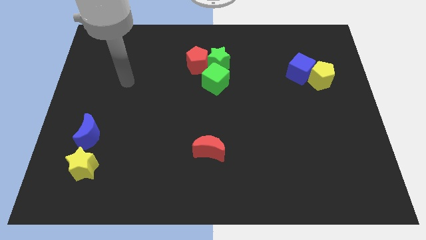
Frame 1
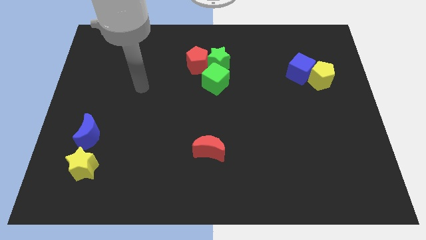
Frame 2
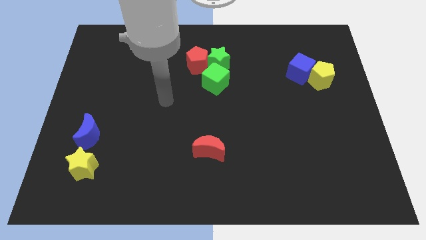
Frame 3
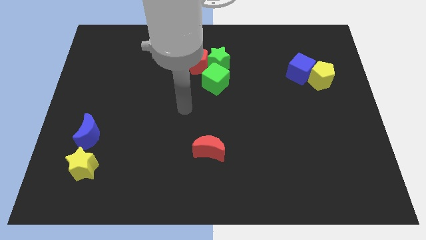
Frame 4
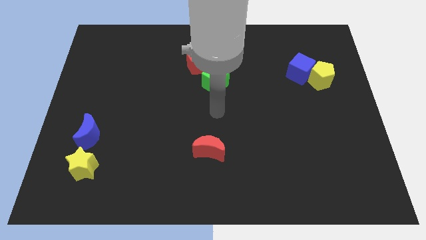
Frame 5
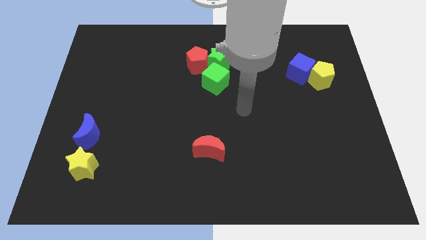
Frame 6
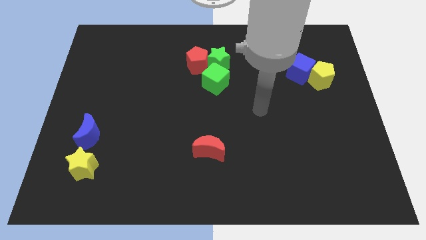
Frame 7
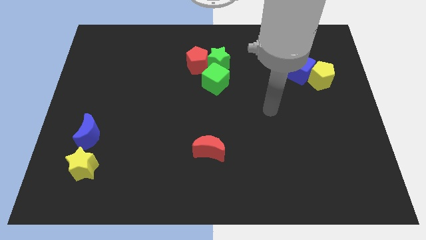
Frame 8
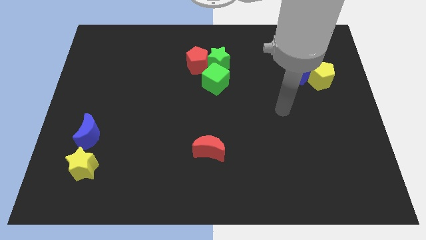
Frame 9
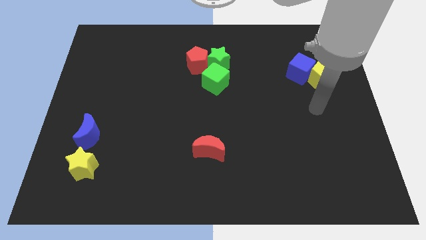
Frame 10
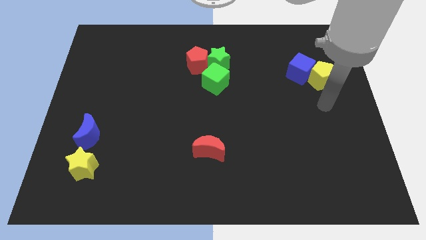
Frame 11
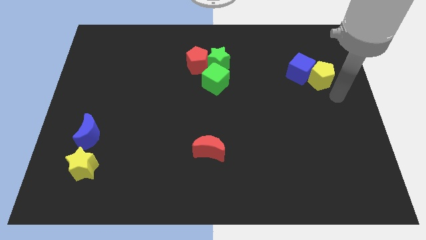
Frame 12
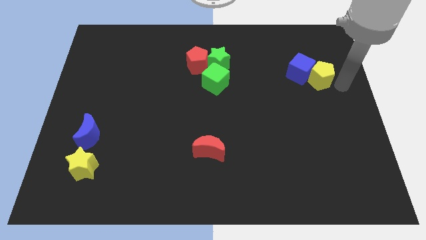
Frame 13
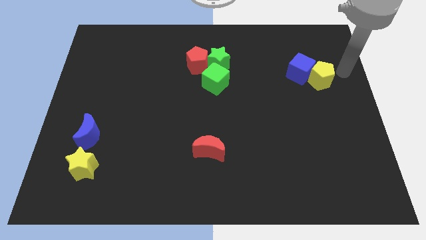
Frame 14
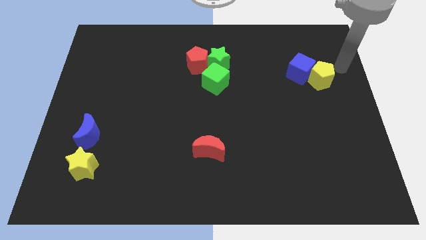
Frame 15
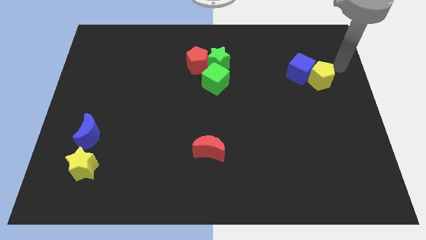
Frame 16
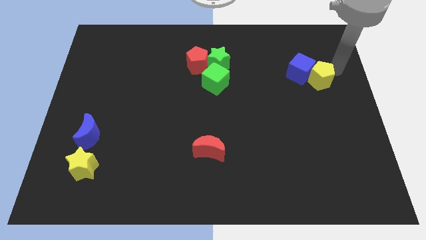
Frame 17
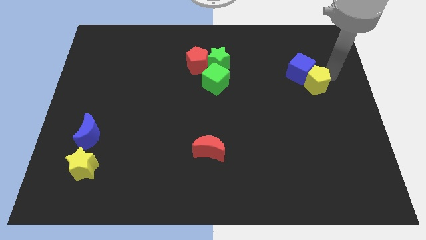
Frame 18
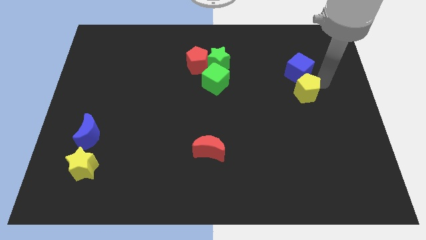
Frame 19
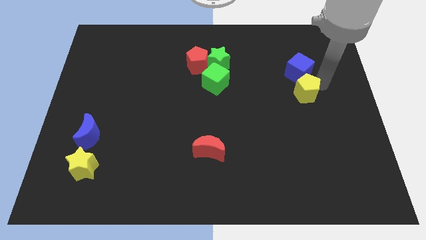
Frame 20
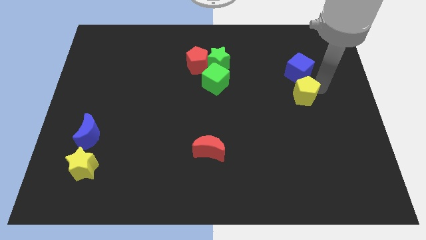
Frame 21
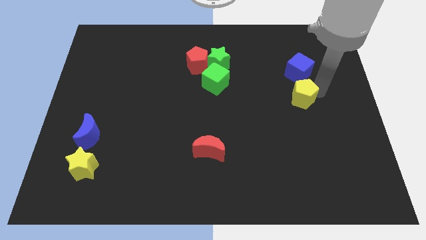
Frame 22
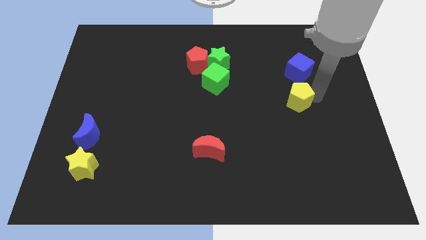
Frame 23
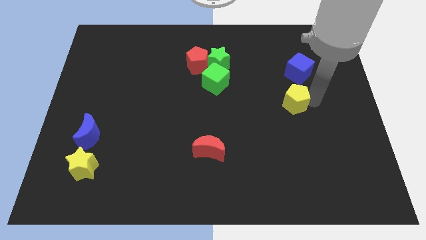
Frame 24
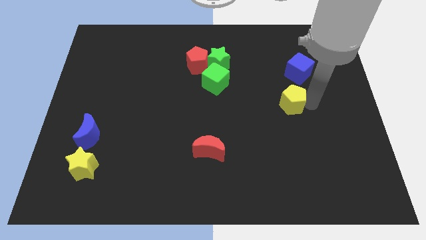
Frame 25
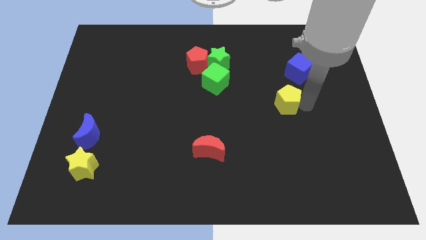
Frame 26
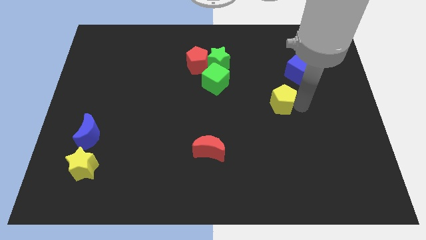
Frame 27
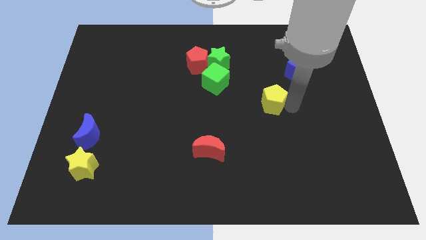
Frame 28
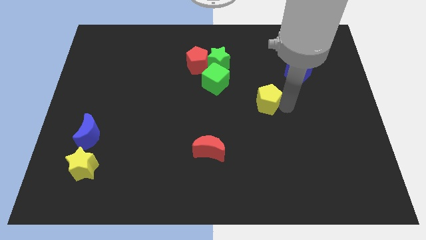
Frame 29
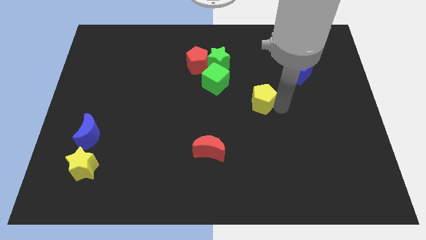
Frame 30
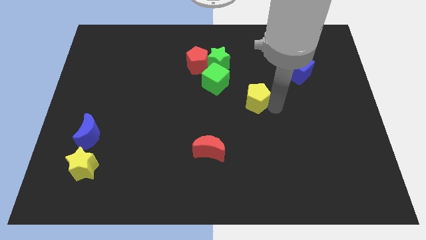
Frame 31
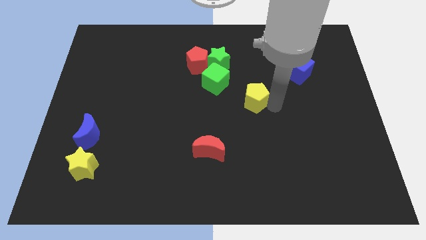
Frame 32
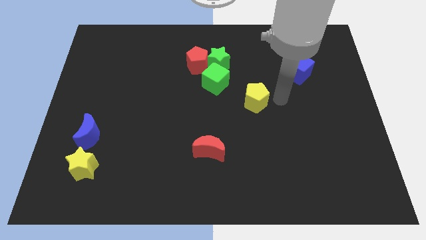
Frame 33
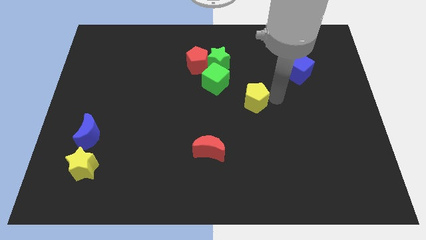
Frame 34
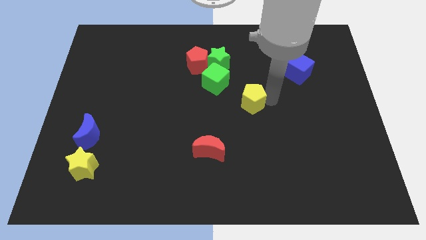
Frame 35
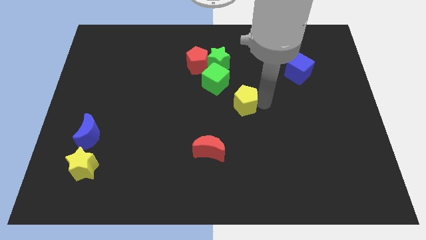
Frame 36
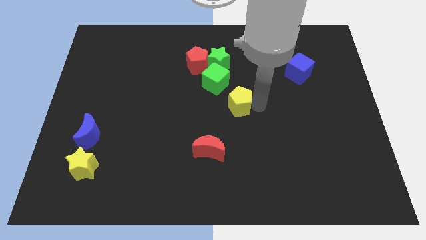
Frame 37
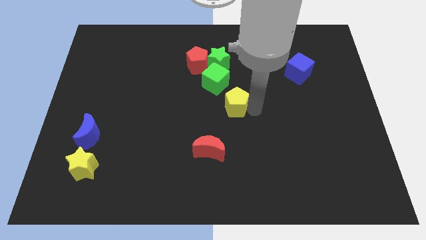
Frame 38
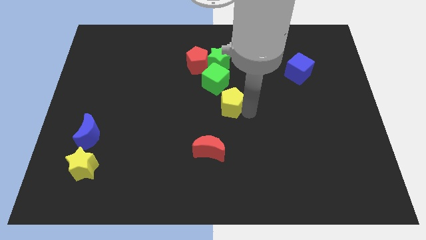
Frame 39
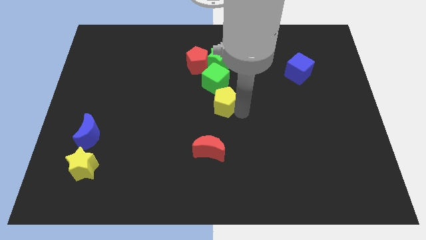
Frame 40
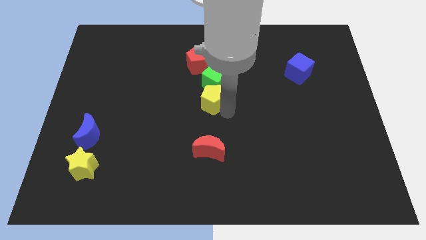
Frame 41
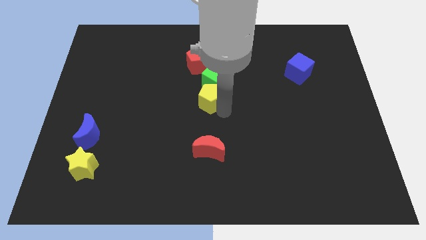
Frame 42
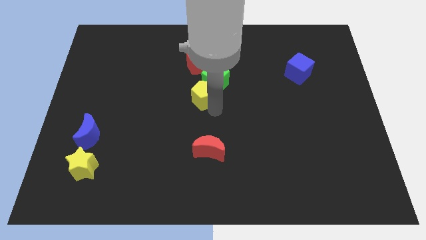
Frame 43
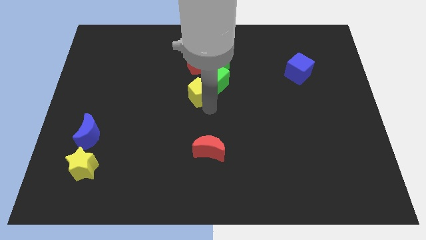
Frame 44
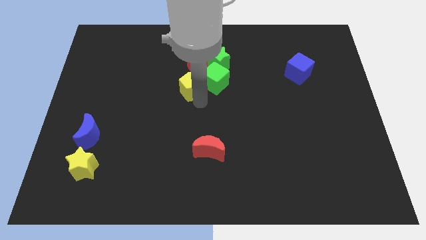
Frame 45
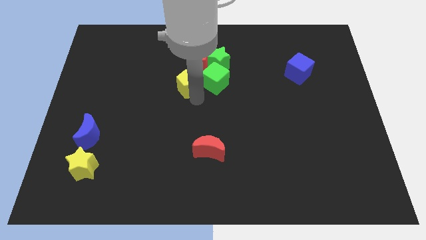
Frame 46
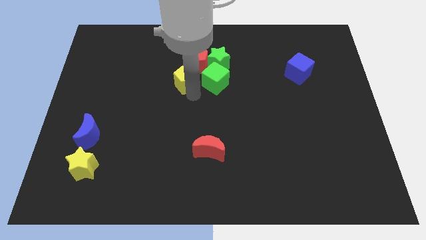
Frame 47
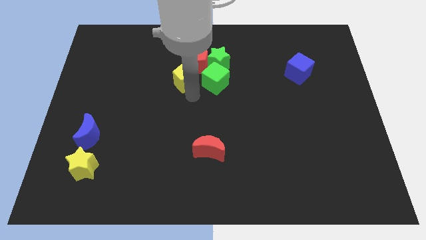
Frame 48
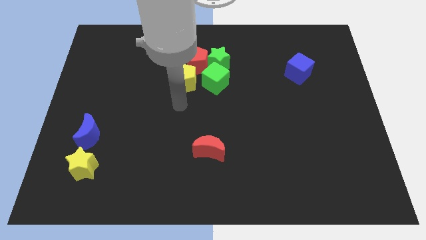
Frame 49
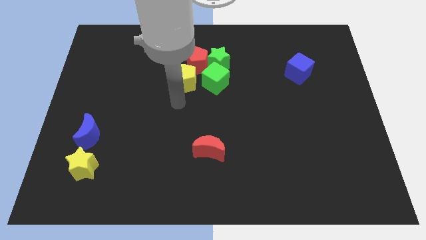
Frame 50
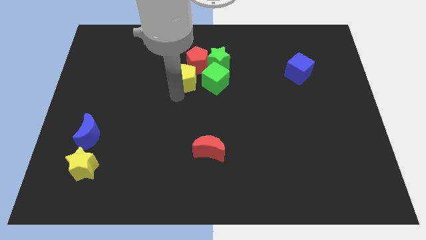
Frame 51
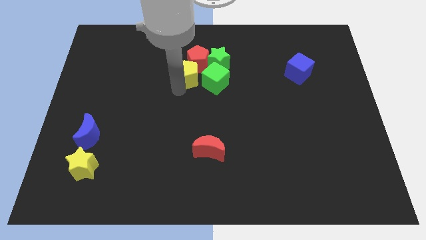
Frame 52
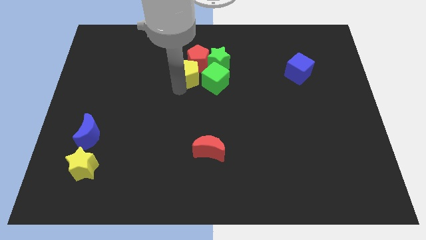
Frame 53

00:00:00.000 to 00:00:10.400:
move the yellow pentagon next to the red pentagon

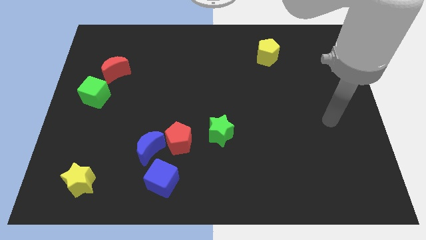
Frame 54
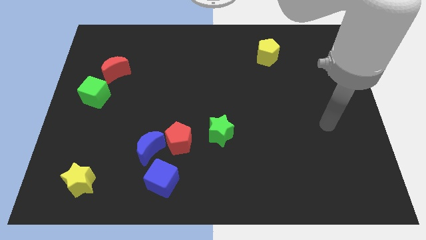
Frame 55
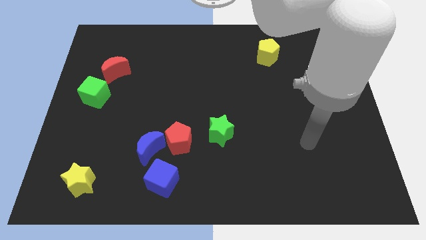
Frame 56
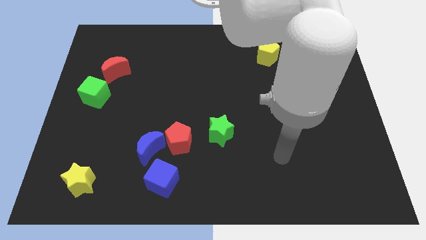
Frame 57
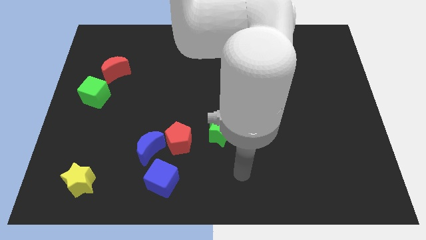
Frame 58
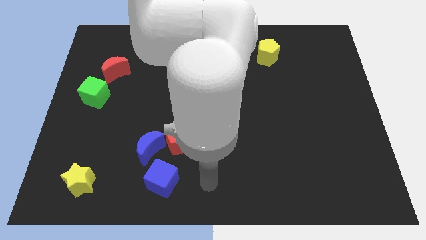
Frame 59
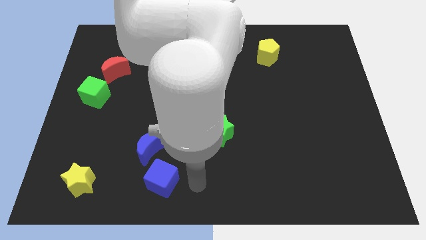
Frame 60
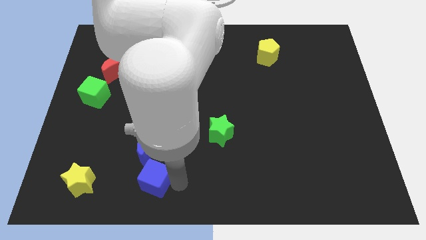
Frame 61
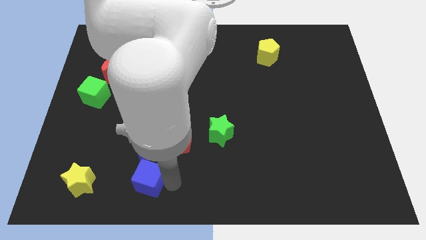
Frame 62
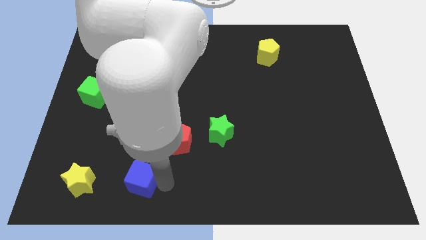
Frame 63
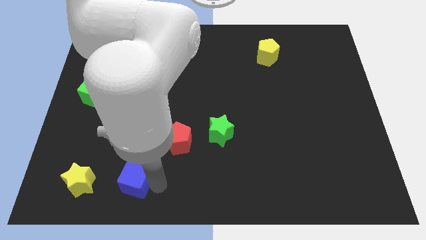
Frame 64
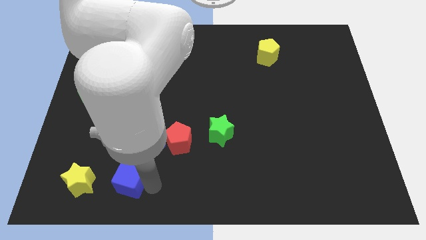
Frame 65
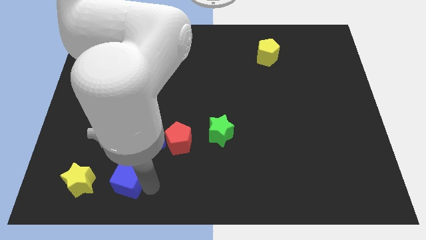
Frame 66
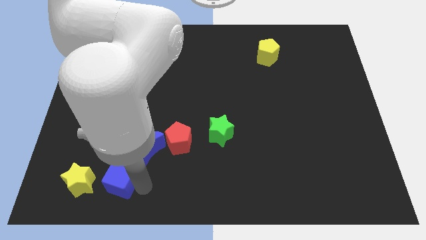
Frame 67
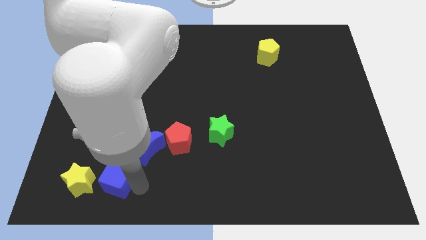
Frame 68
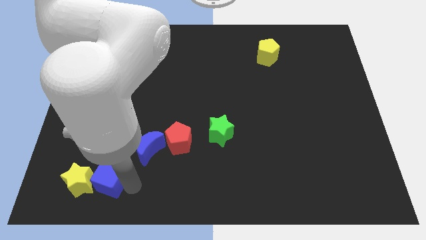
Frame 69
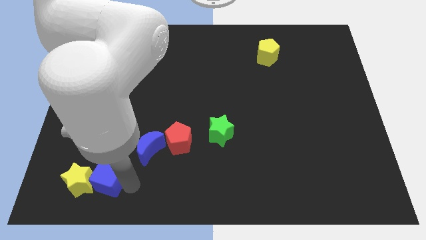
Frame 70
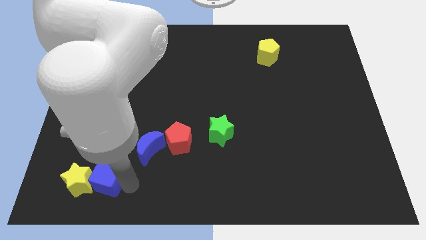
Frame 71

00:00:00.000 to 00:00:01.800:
push the blue cube to the yellow star

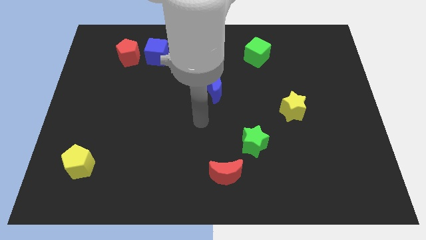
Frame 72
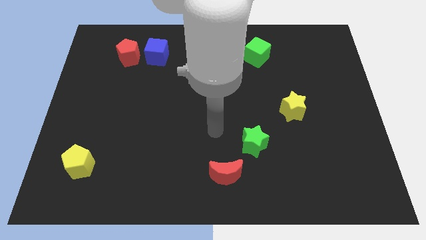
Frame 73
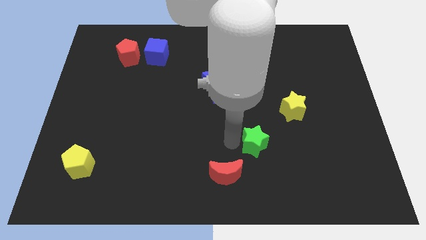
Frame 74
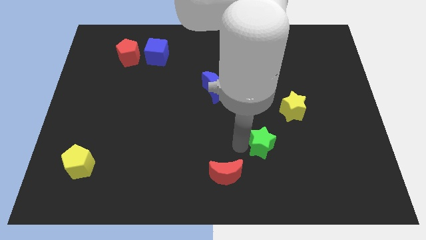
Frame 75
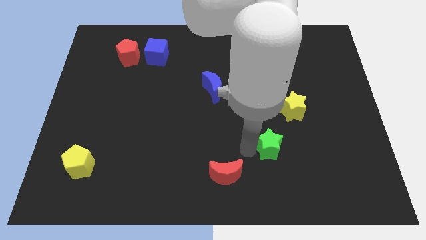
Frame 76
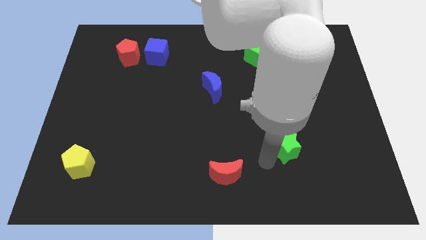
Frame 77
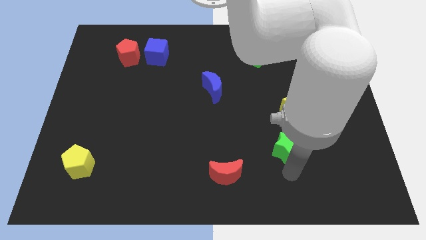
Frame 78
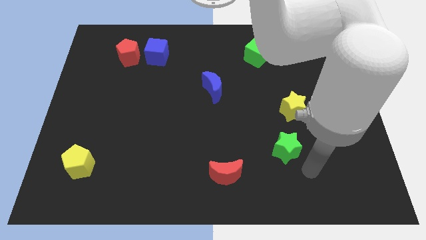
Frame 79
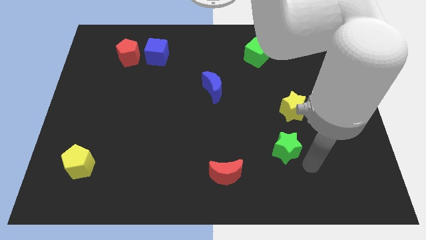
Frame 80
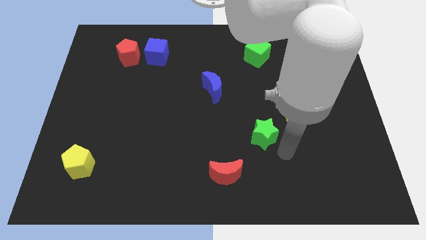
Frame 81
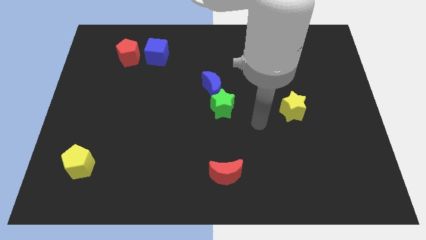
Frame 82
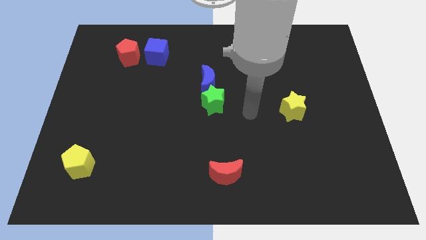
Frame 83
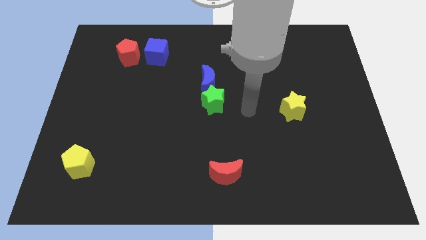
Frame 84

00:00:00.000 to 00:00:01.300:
slide the green star close to the blue moon

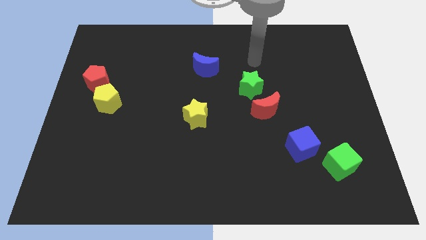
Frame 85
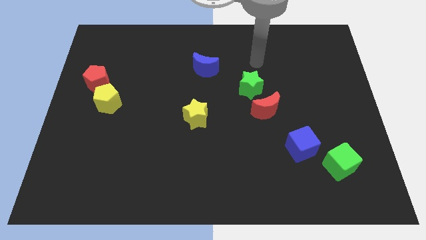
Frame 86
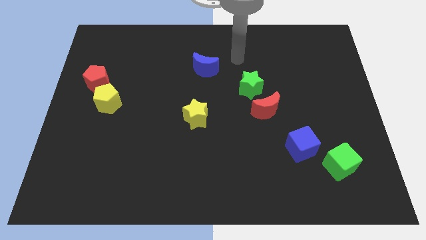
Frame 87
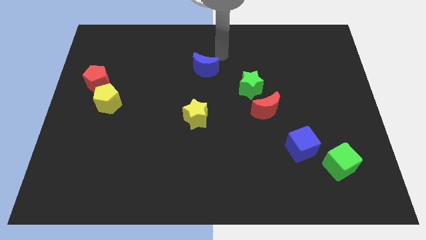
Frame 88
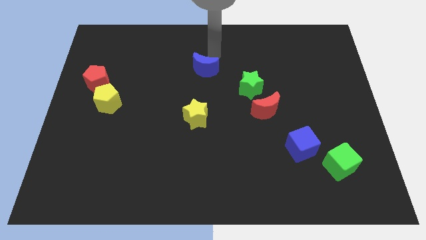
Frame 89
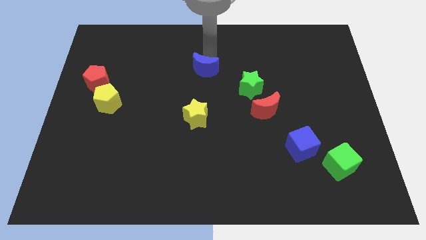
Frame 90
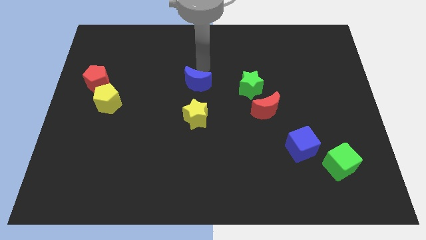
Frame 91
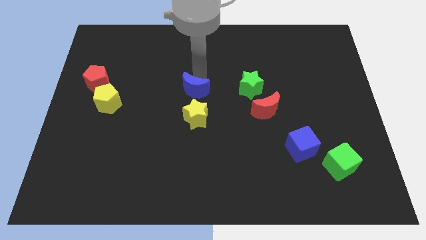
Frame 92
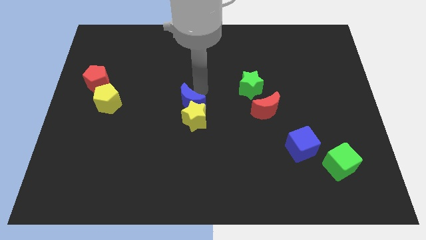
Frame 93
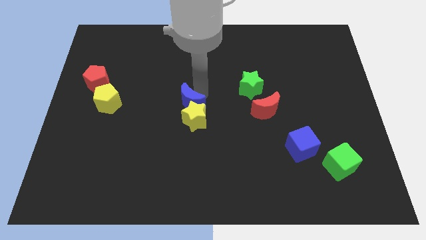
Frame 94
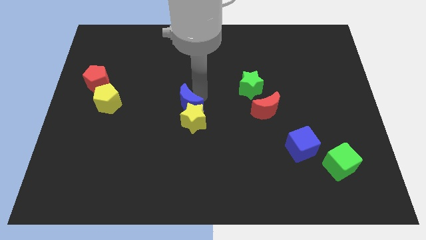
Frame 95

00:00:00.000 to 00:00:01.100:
put the blue moon close to the yellow star
